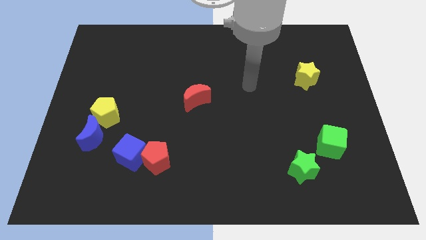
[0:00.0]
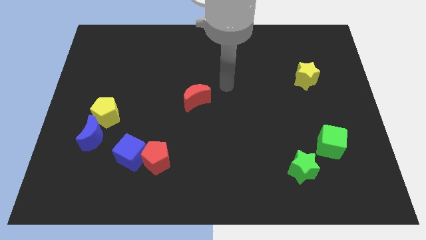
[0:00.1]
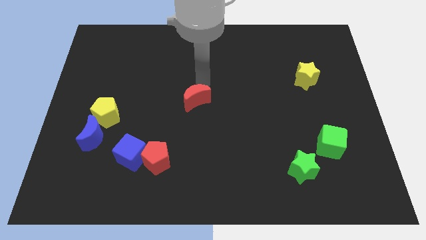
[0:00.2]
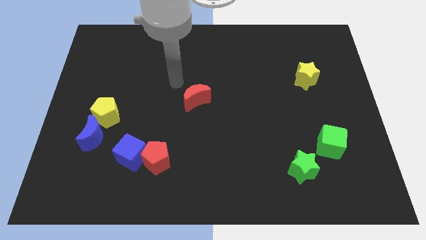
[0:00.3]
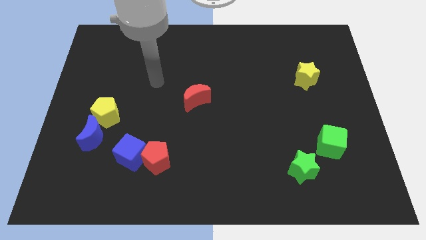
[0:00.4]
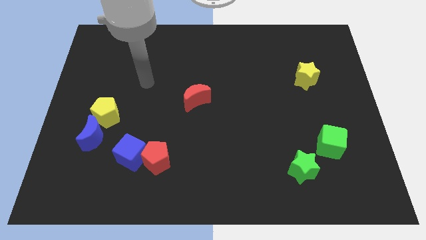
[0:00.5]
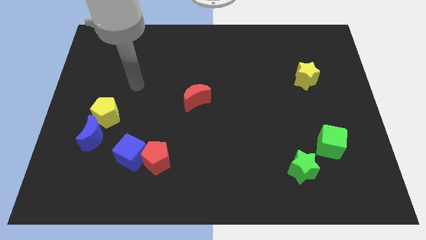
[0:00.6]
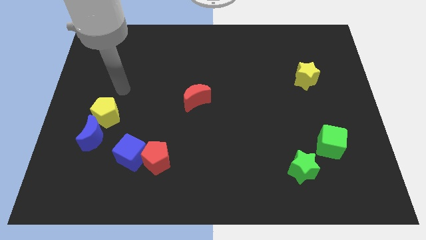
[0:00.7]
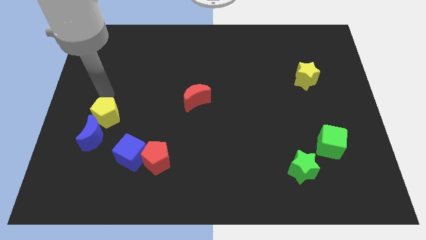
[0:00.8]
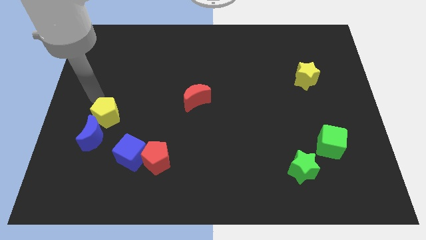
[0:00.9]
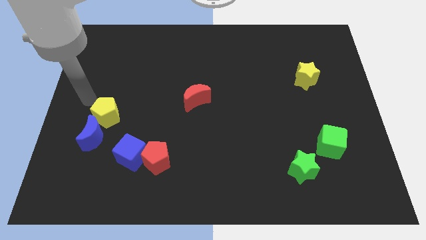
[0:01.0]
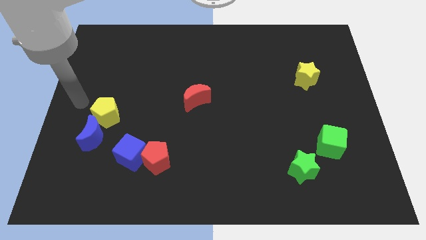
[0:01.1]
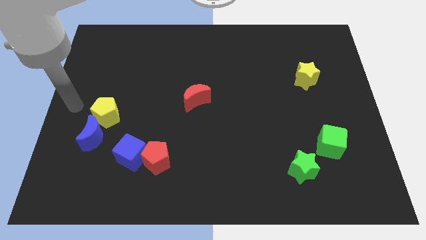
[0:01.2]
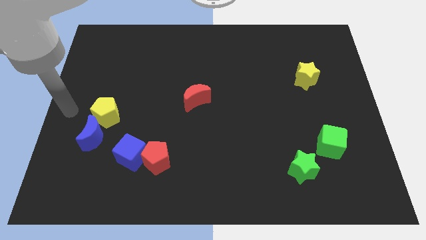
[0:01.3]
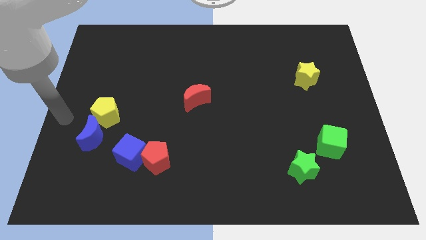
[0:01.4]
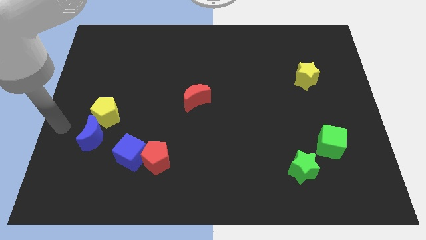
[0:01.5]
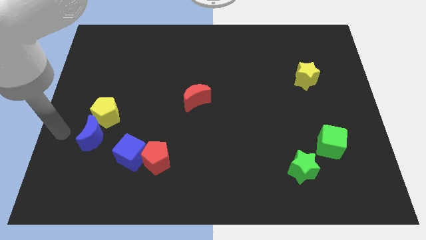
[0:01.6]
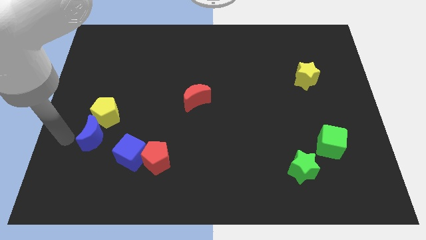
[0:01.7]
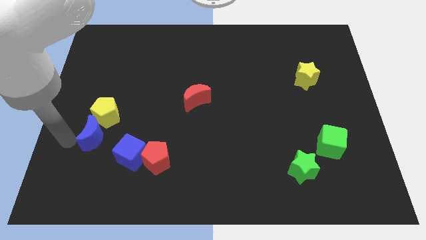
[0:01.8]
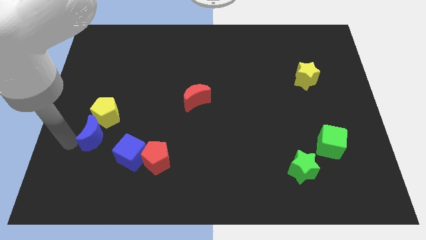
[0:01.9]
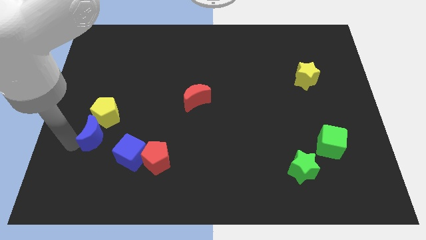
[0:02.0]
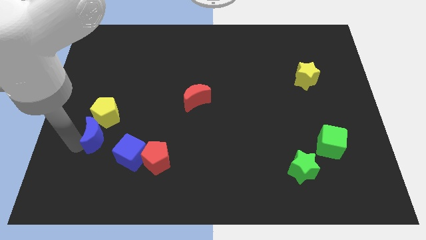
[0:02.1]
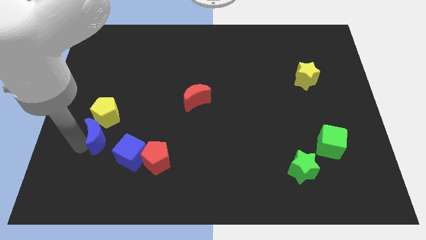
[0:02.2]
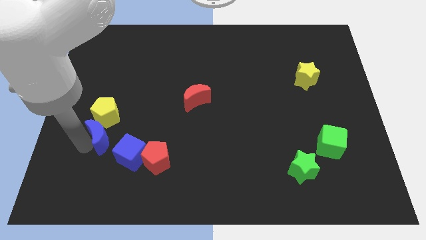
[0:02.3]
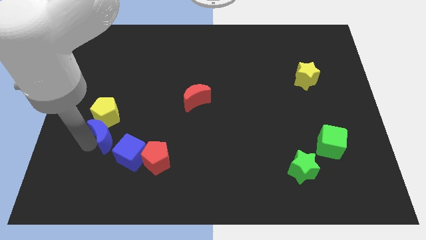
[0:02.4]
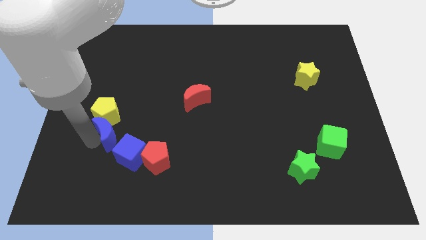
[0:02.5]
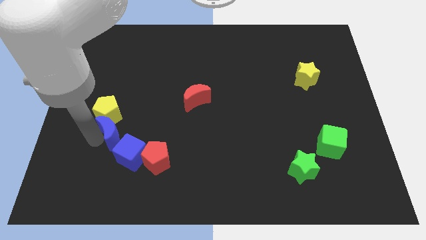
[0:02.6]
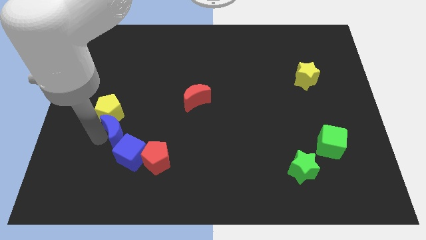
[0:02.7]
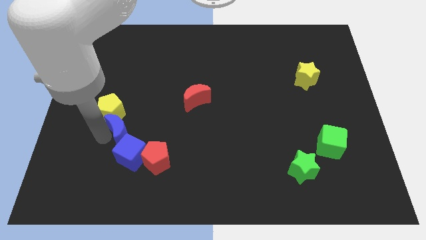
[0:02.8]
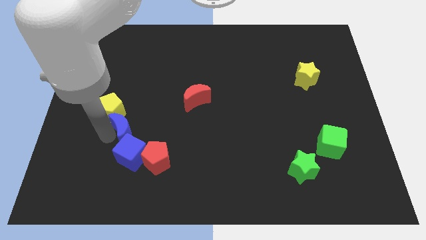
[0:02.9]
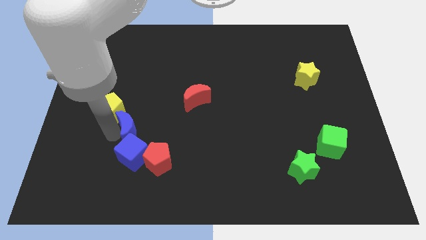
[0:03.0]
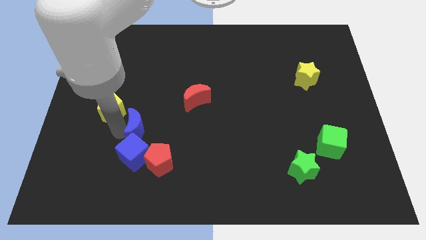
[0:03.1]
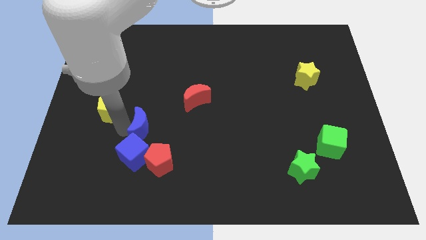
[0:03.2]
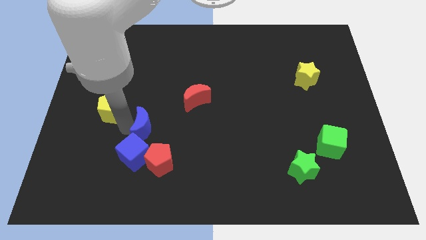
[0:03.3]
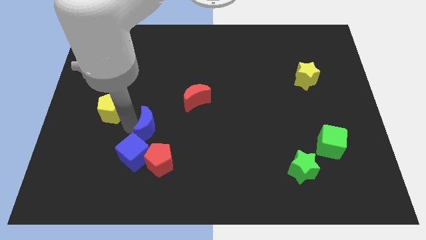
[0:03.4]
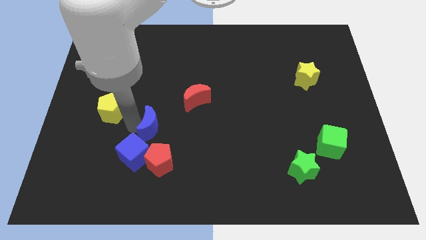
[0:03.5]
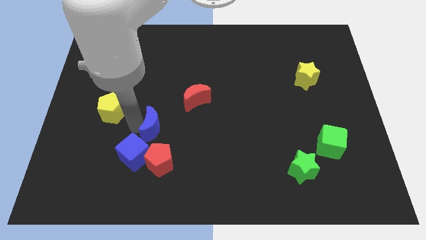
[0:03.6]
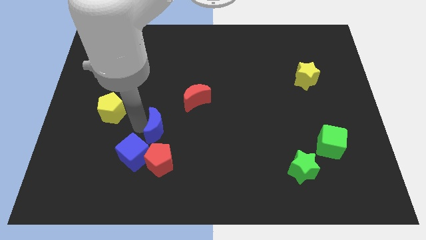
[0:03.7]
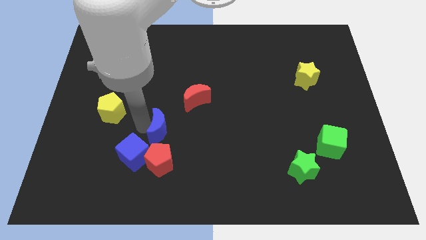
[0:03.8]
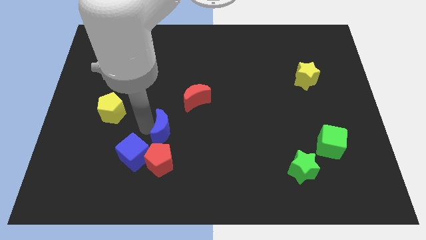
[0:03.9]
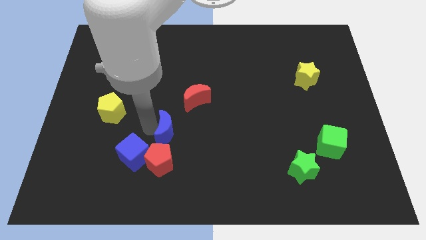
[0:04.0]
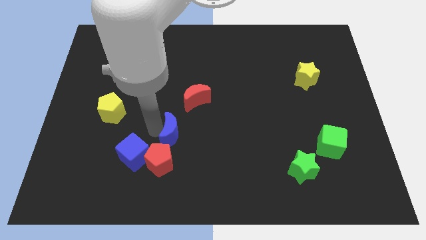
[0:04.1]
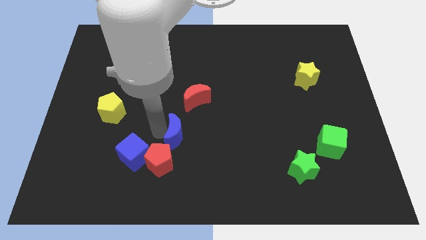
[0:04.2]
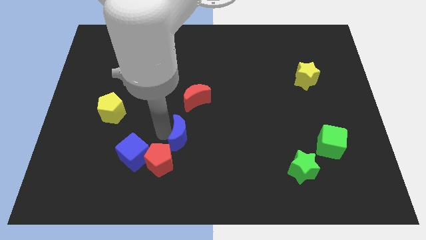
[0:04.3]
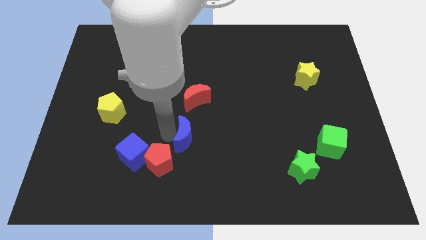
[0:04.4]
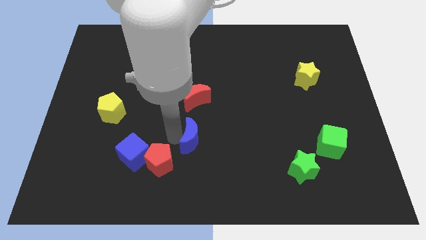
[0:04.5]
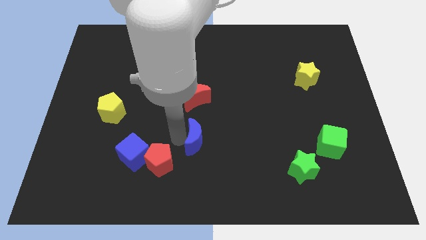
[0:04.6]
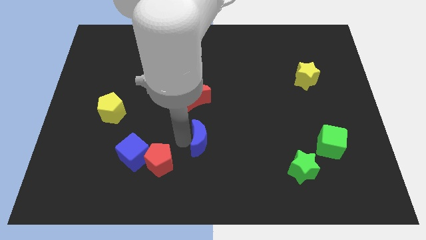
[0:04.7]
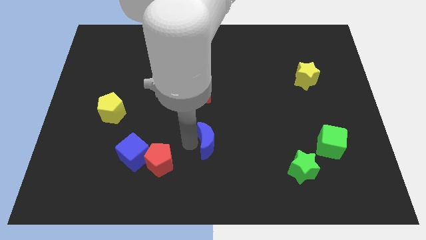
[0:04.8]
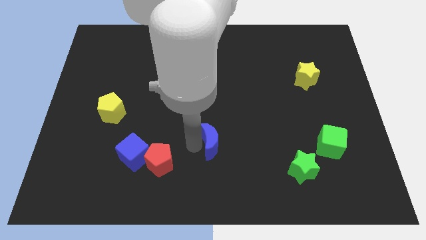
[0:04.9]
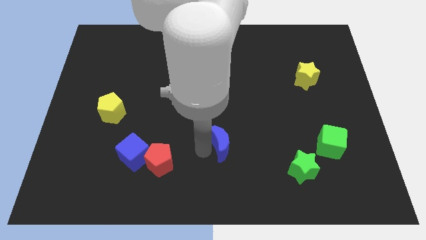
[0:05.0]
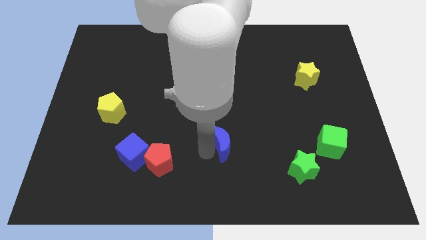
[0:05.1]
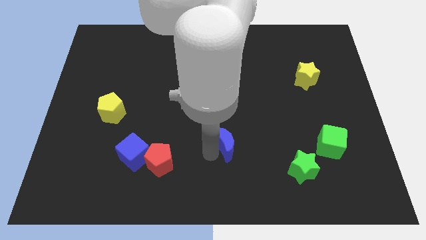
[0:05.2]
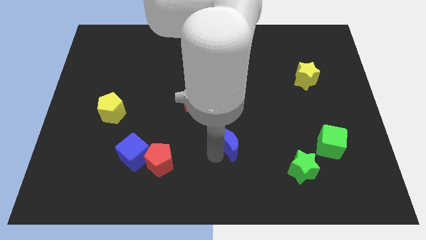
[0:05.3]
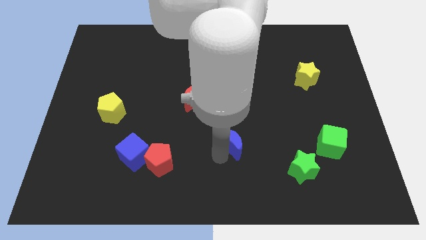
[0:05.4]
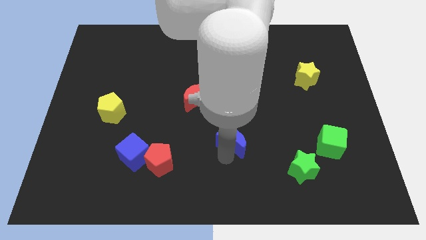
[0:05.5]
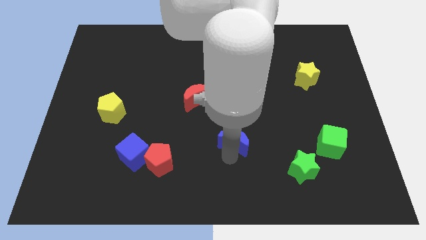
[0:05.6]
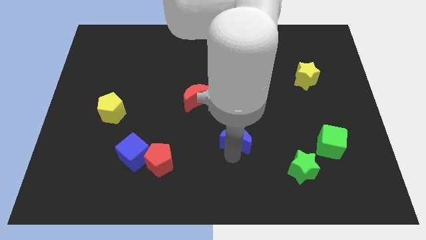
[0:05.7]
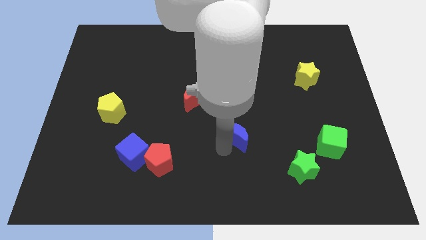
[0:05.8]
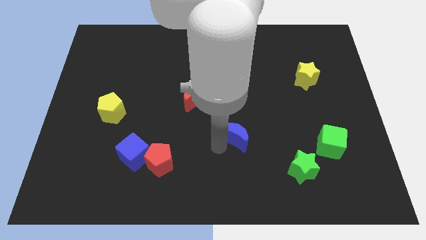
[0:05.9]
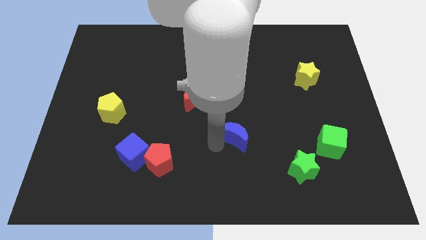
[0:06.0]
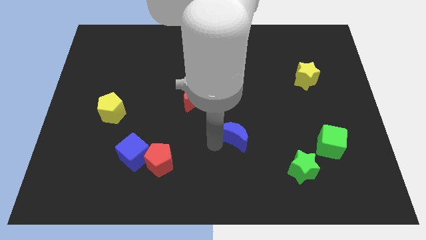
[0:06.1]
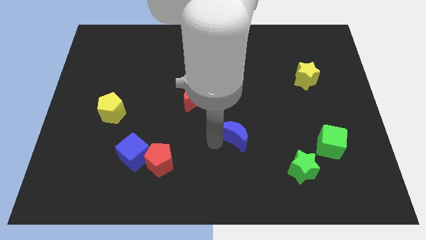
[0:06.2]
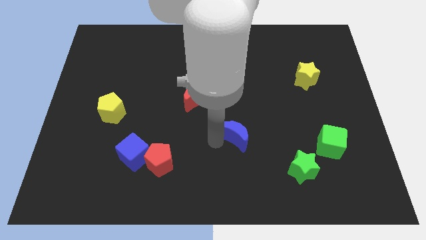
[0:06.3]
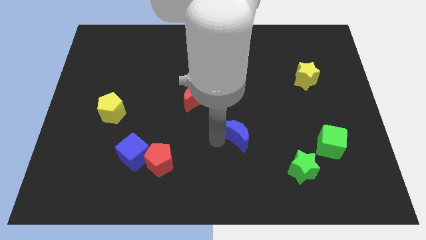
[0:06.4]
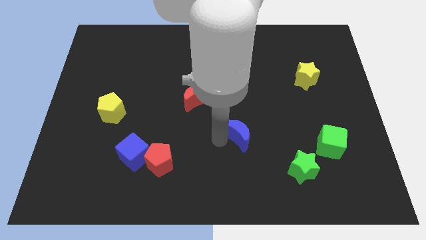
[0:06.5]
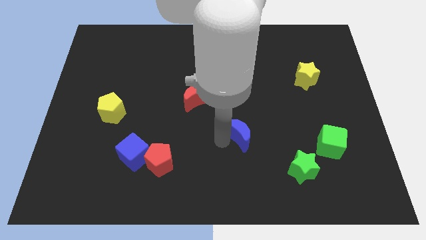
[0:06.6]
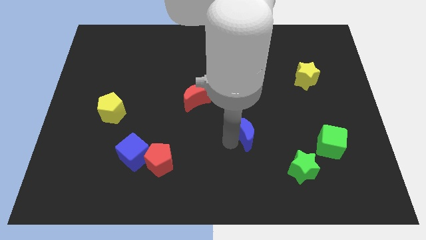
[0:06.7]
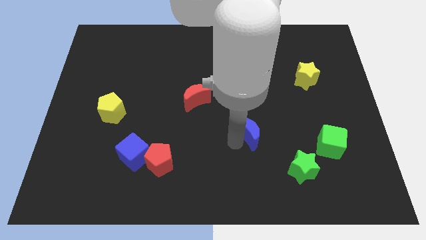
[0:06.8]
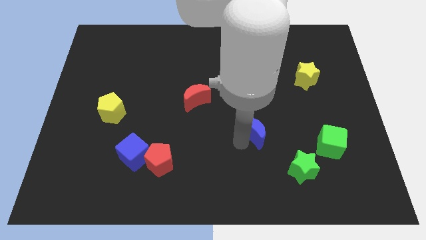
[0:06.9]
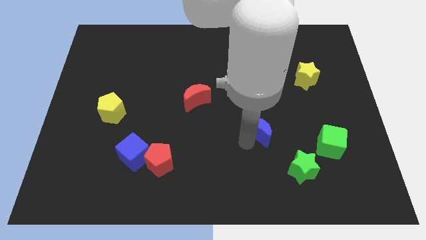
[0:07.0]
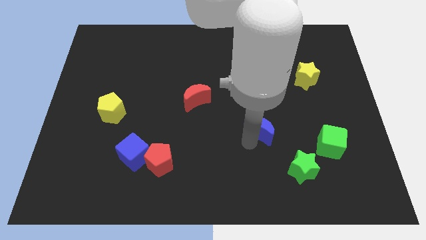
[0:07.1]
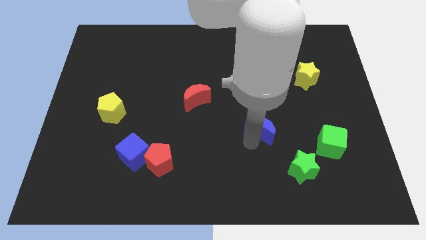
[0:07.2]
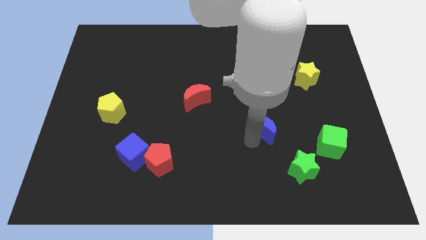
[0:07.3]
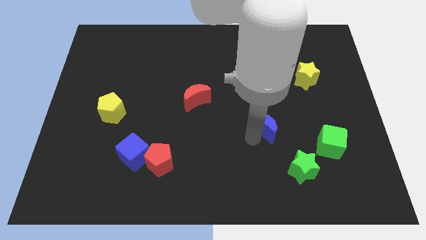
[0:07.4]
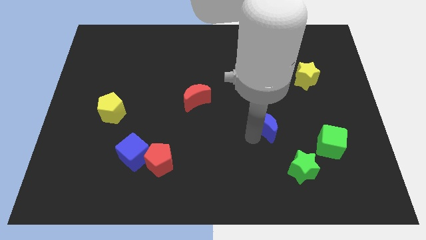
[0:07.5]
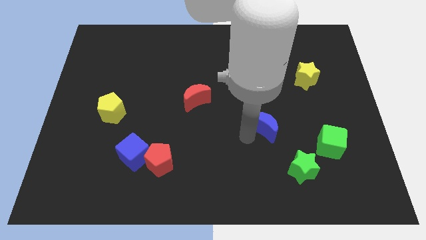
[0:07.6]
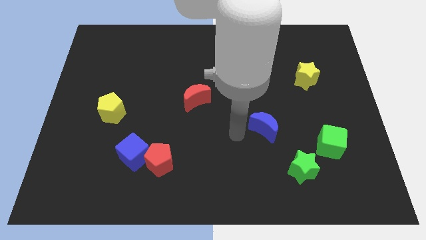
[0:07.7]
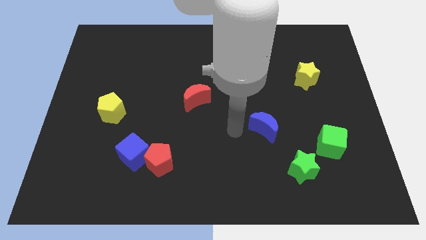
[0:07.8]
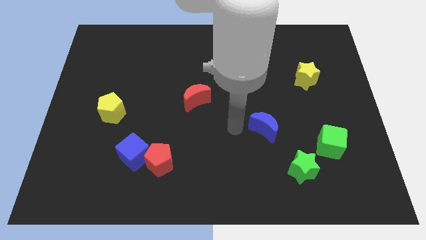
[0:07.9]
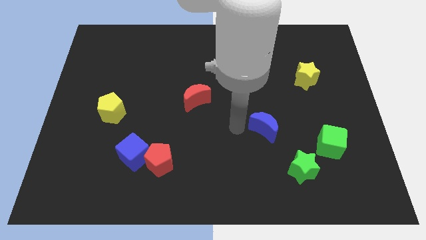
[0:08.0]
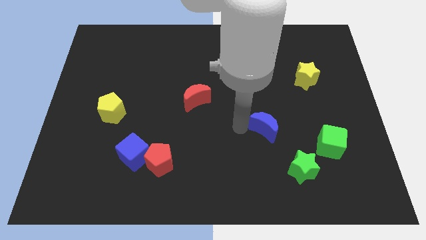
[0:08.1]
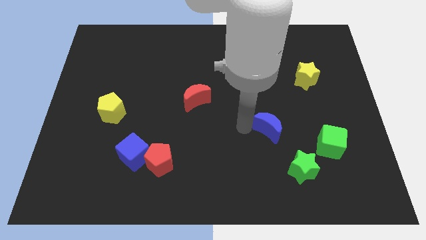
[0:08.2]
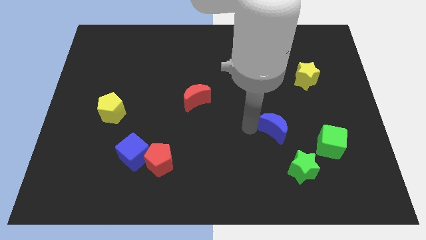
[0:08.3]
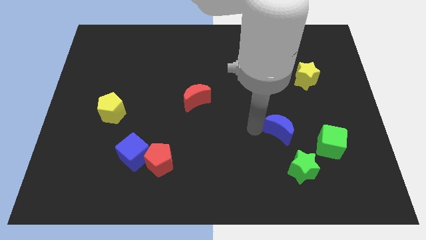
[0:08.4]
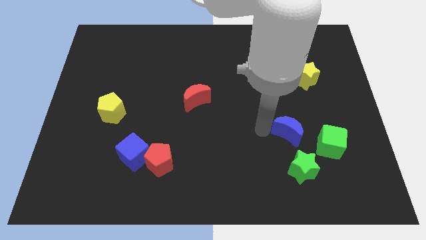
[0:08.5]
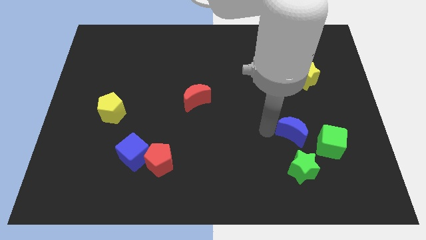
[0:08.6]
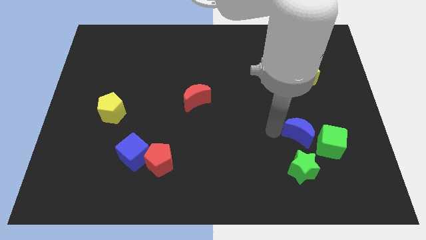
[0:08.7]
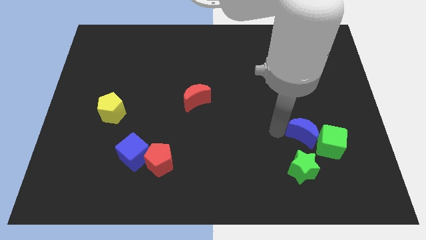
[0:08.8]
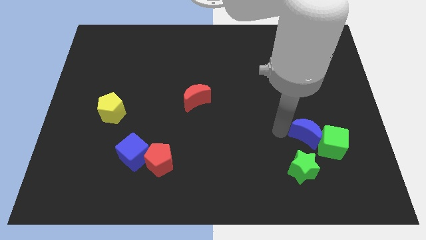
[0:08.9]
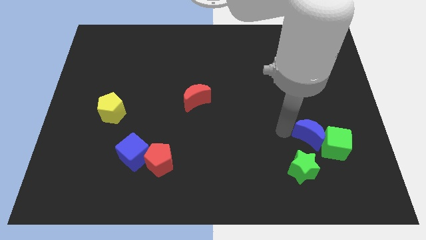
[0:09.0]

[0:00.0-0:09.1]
push the blue moon to the green cube
